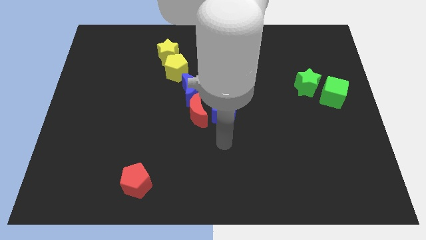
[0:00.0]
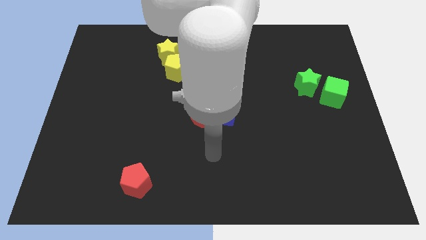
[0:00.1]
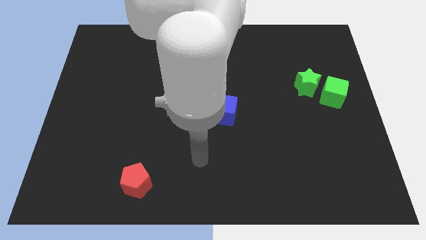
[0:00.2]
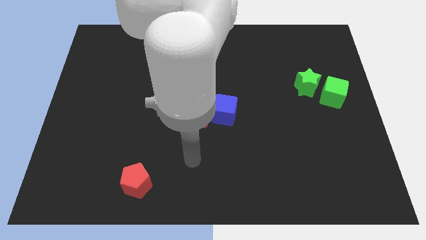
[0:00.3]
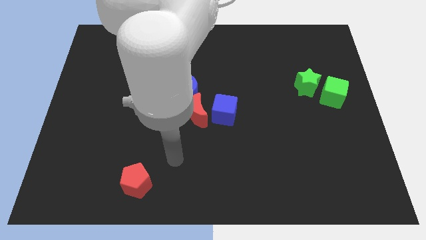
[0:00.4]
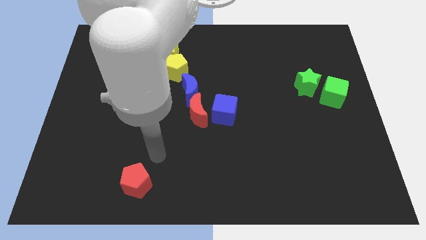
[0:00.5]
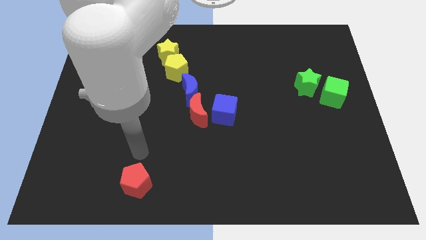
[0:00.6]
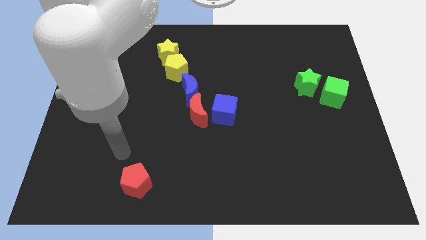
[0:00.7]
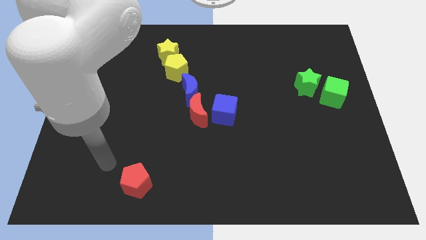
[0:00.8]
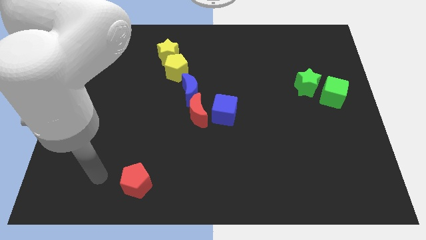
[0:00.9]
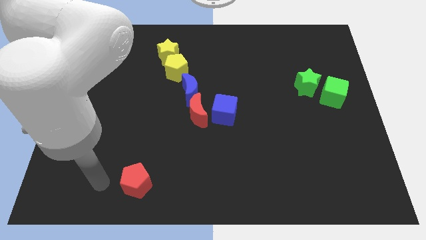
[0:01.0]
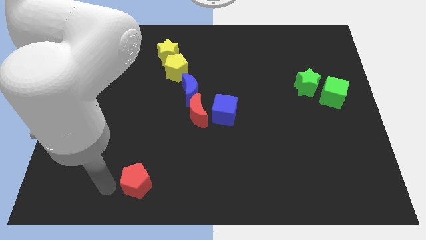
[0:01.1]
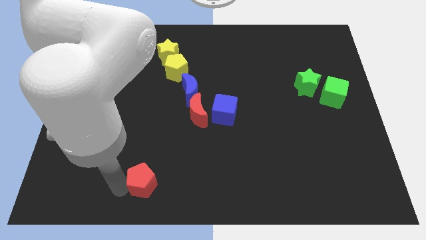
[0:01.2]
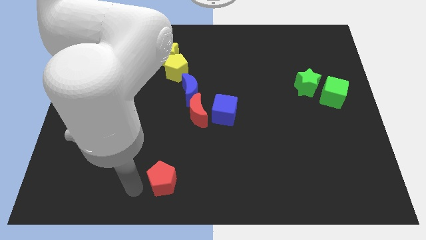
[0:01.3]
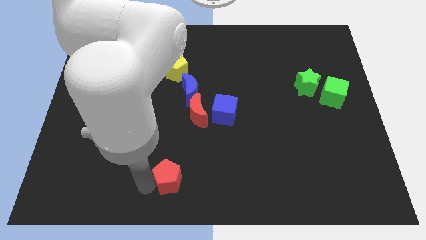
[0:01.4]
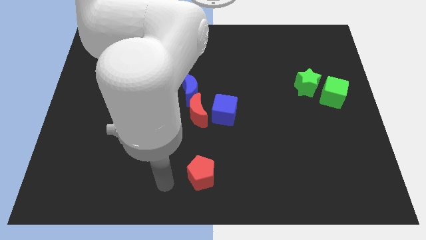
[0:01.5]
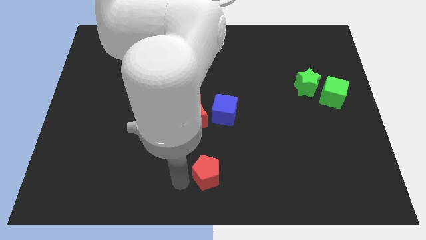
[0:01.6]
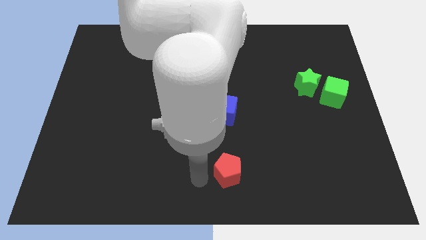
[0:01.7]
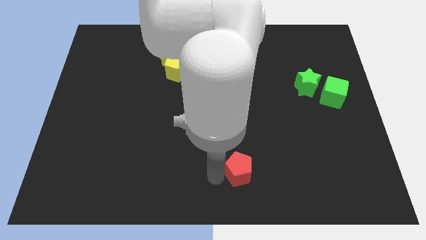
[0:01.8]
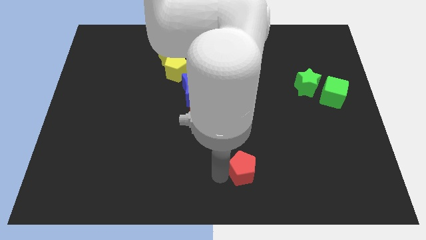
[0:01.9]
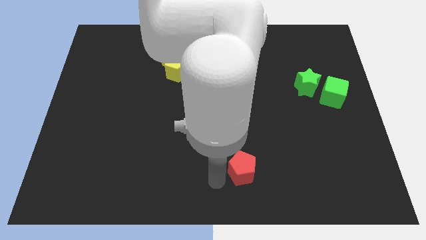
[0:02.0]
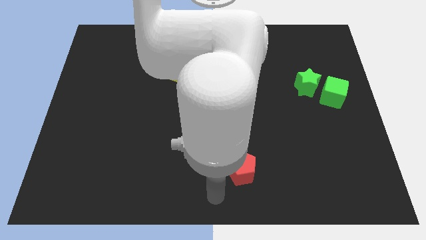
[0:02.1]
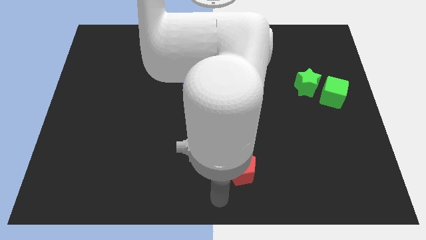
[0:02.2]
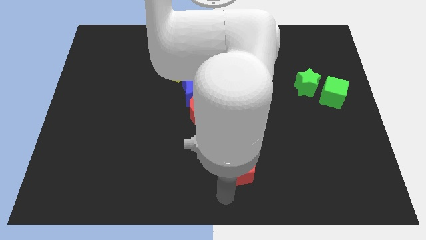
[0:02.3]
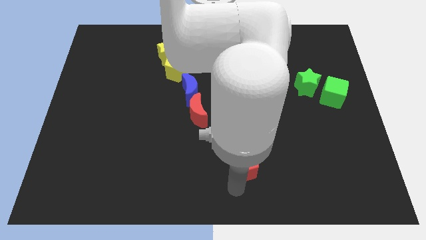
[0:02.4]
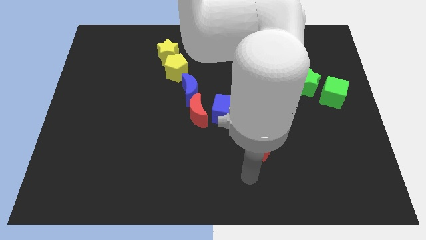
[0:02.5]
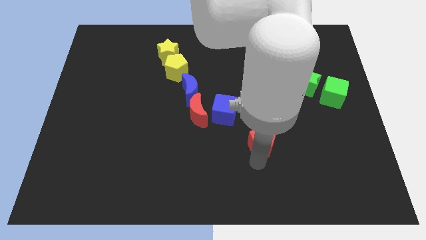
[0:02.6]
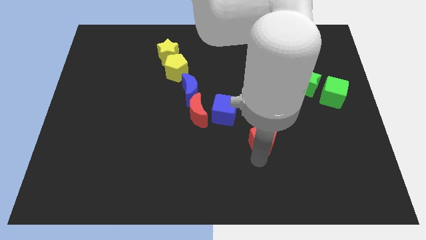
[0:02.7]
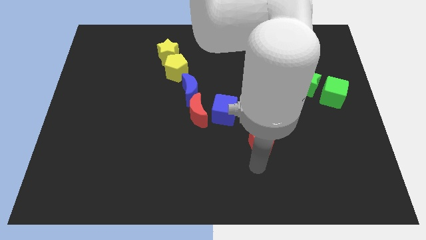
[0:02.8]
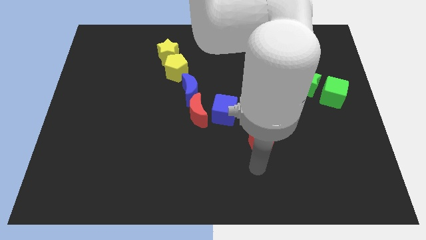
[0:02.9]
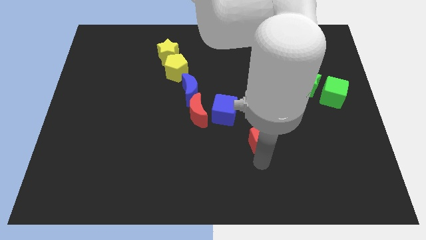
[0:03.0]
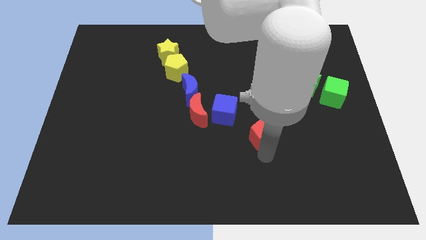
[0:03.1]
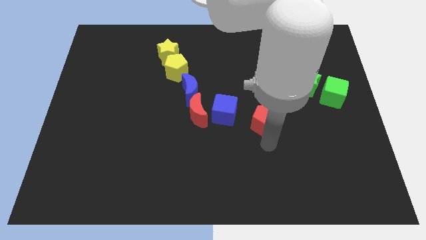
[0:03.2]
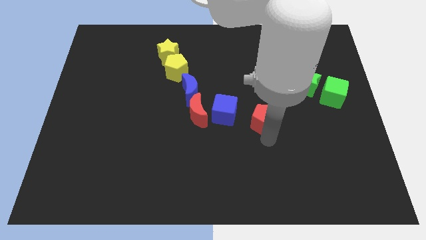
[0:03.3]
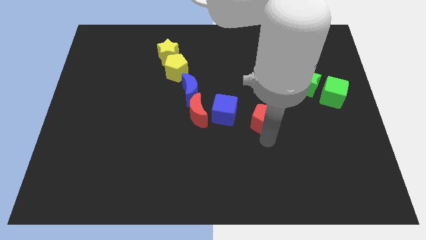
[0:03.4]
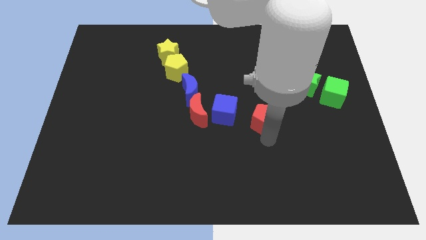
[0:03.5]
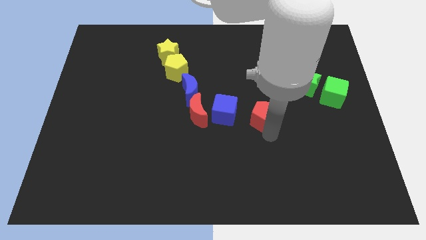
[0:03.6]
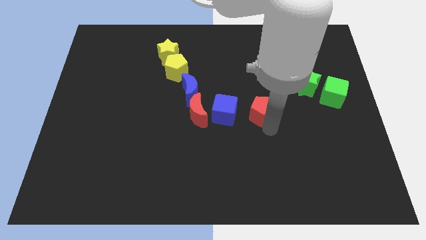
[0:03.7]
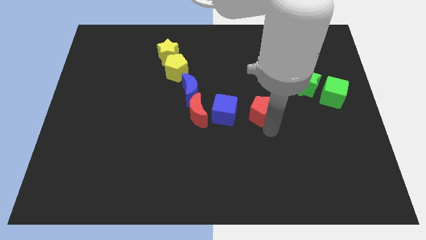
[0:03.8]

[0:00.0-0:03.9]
move the red pentagon to the right of the blue cube

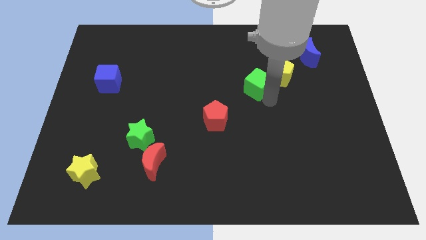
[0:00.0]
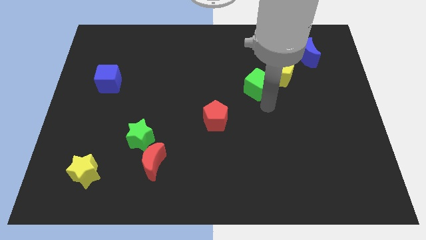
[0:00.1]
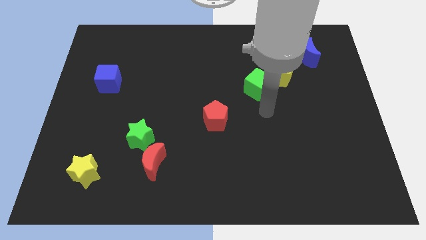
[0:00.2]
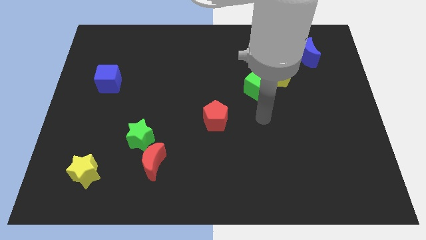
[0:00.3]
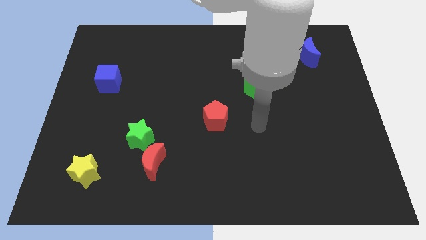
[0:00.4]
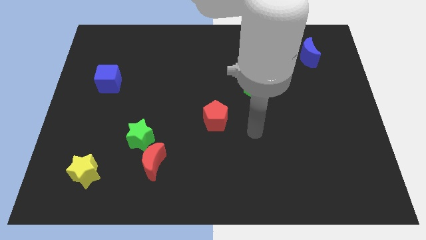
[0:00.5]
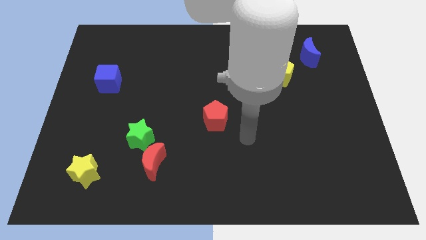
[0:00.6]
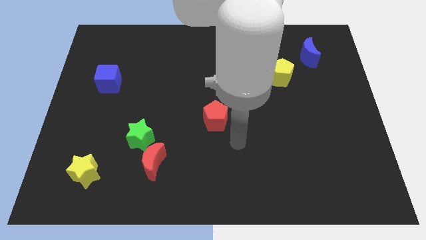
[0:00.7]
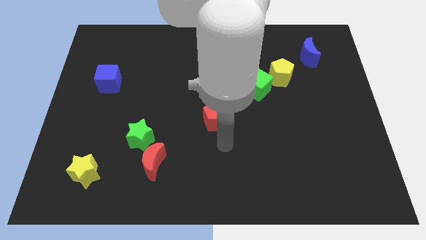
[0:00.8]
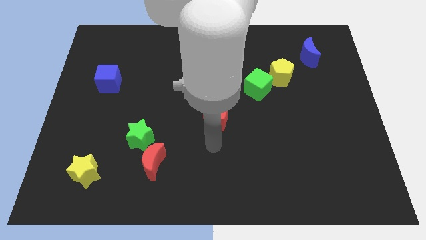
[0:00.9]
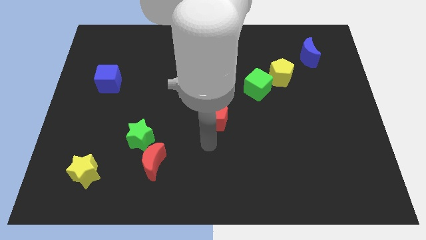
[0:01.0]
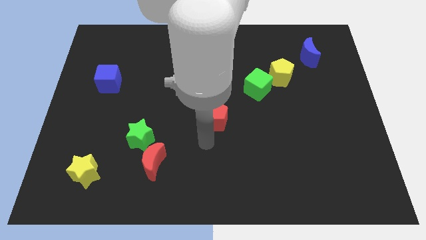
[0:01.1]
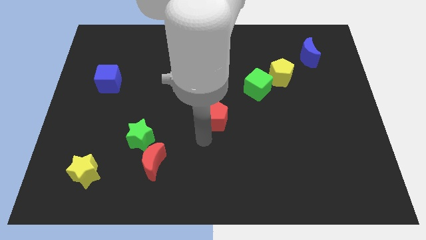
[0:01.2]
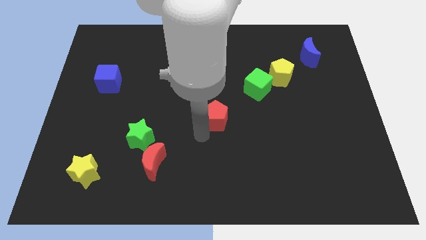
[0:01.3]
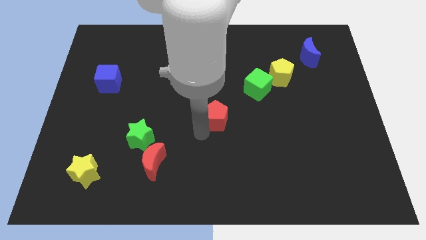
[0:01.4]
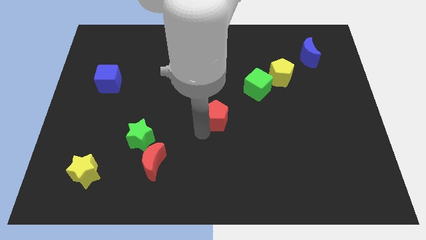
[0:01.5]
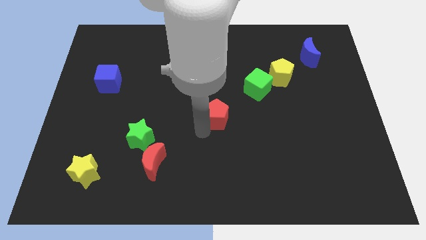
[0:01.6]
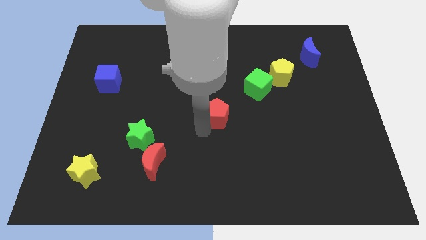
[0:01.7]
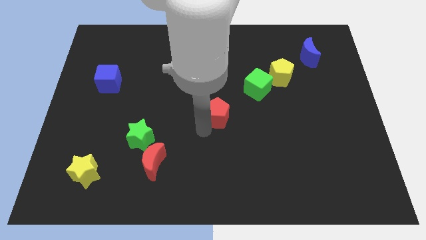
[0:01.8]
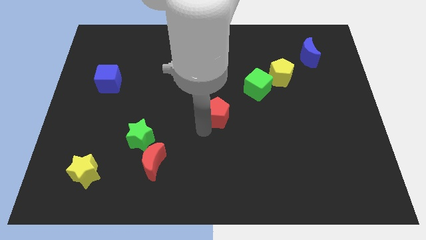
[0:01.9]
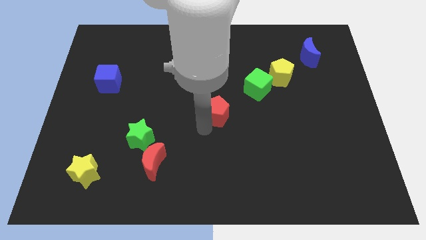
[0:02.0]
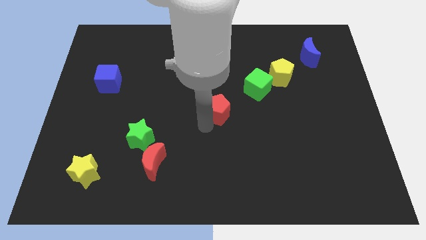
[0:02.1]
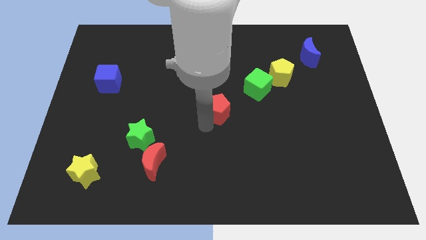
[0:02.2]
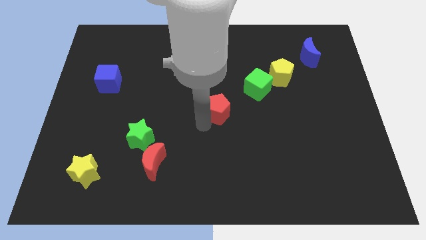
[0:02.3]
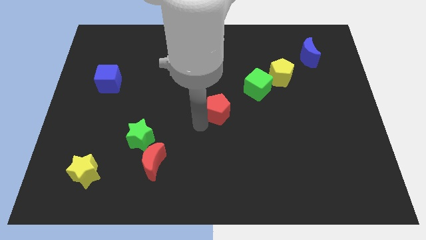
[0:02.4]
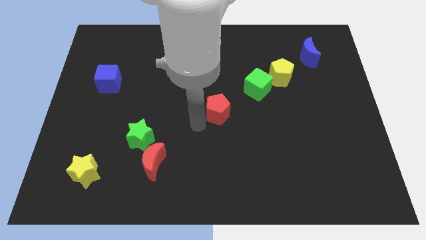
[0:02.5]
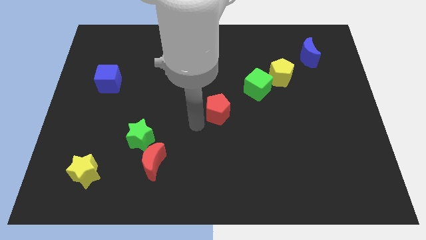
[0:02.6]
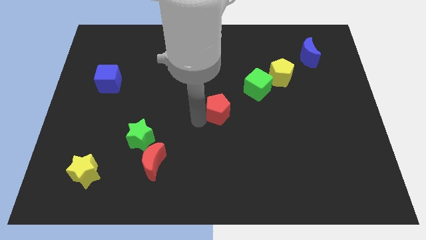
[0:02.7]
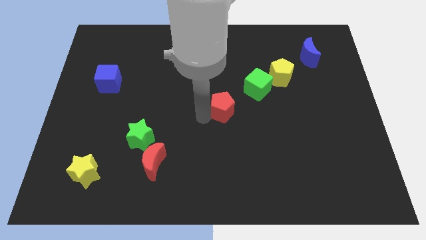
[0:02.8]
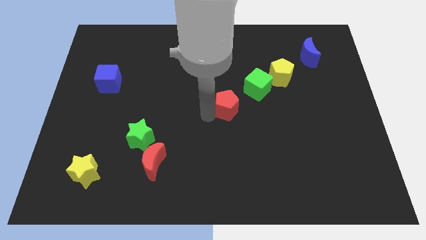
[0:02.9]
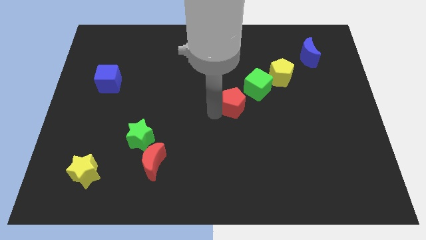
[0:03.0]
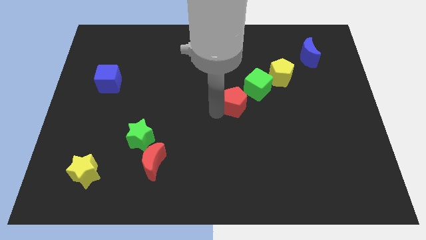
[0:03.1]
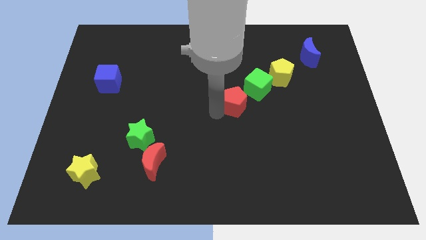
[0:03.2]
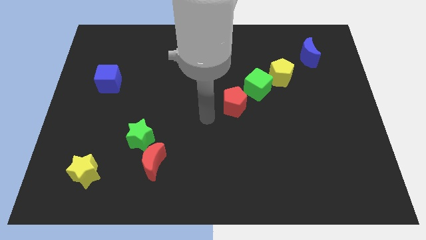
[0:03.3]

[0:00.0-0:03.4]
drag the red pentagon slightly towards the green cube

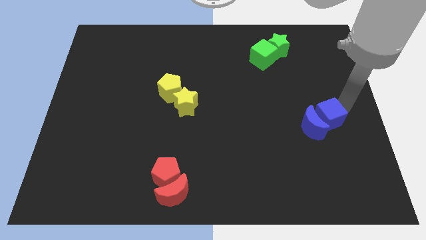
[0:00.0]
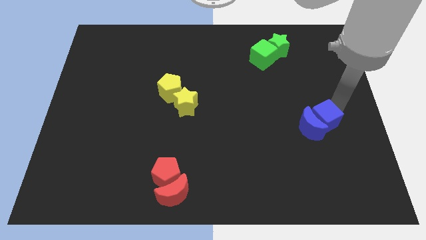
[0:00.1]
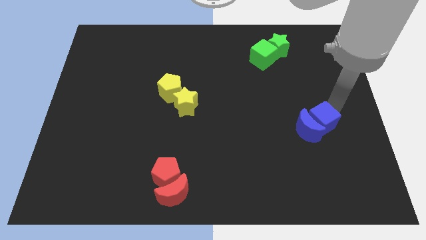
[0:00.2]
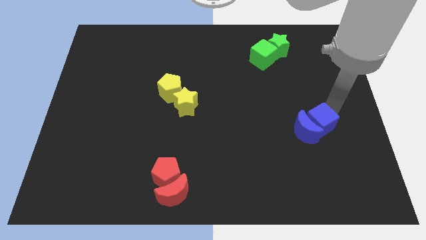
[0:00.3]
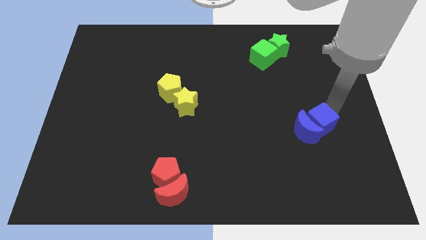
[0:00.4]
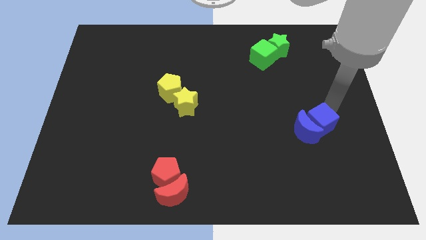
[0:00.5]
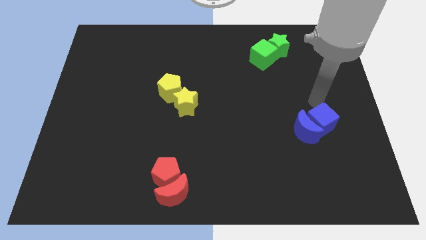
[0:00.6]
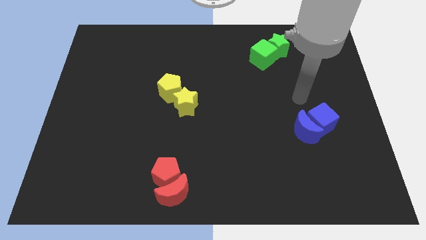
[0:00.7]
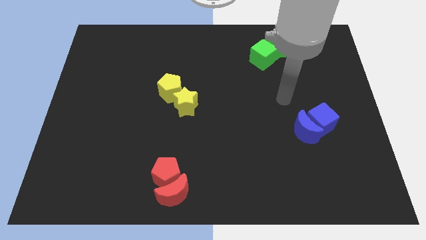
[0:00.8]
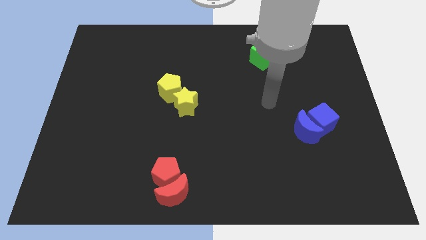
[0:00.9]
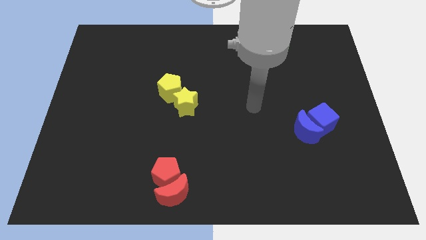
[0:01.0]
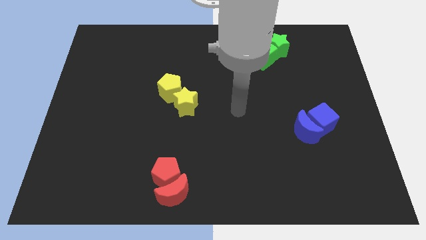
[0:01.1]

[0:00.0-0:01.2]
push the blue cube into the blue crescent

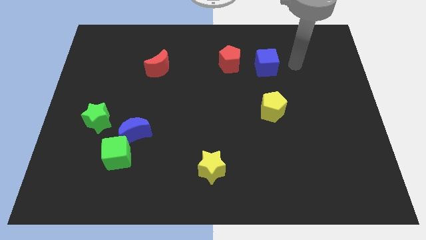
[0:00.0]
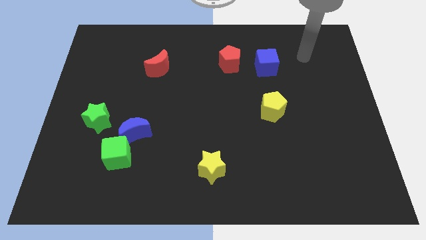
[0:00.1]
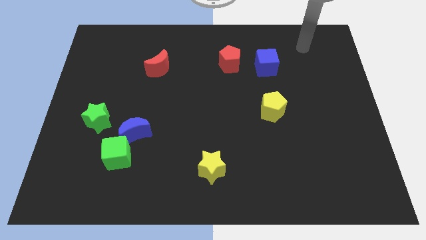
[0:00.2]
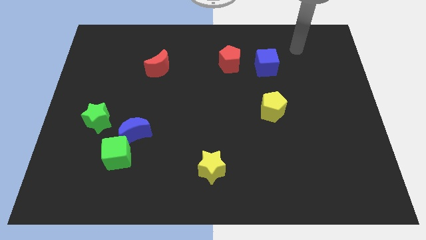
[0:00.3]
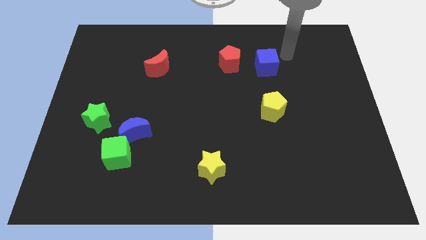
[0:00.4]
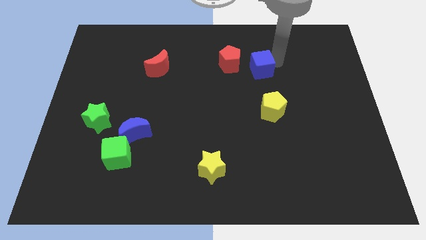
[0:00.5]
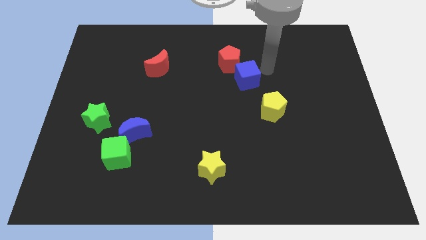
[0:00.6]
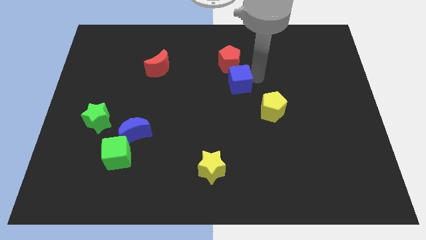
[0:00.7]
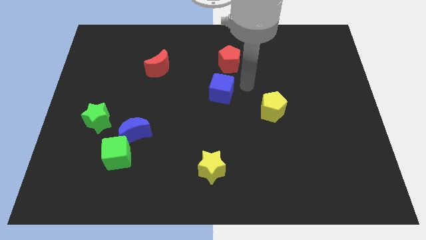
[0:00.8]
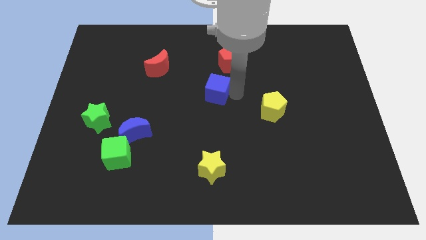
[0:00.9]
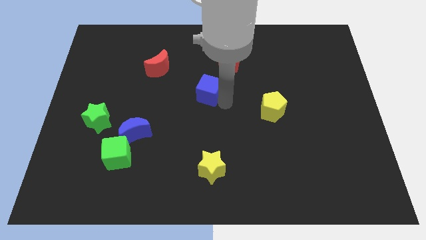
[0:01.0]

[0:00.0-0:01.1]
move the blue cube to the bottom left of the red pentagon
